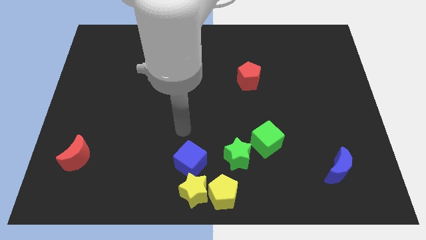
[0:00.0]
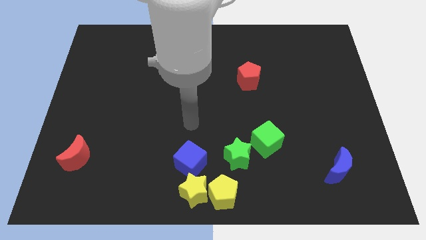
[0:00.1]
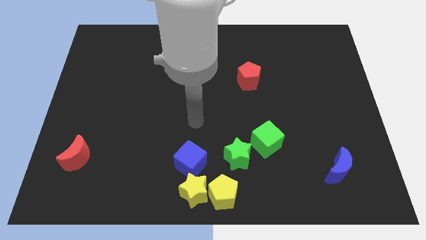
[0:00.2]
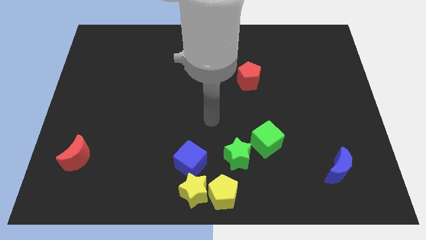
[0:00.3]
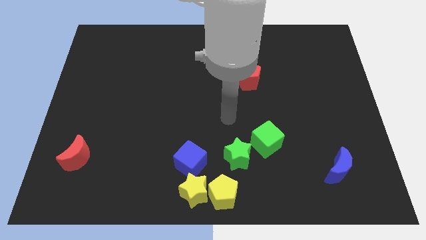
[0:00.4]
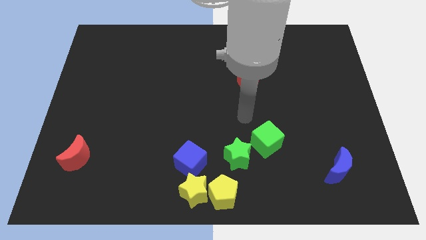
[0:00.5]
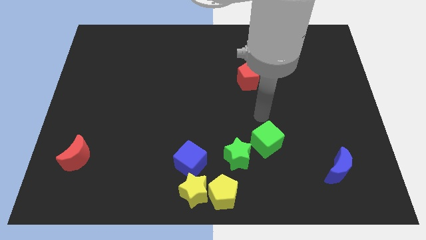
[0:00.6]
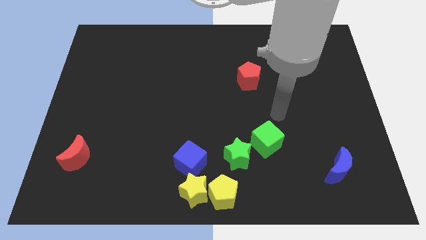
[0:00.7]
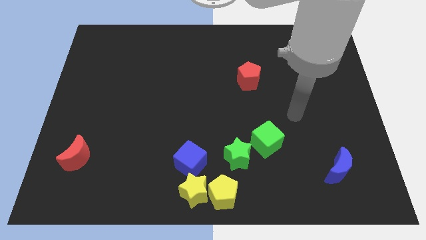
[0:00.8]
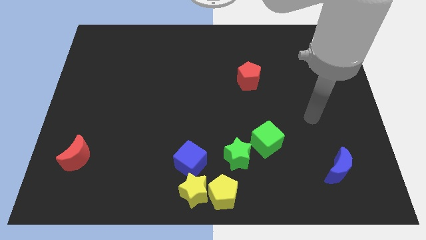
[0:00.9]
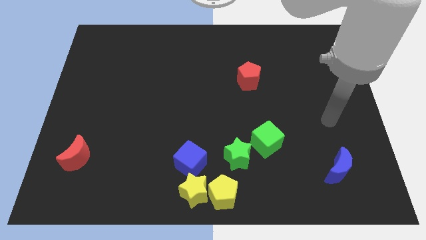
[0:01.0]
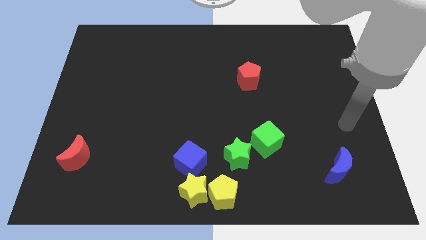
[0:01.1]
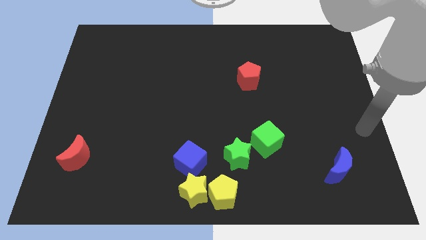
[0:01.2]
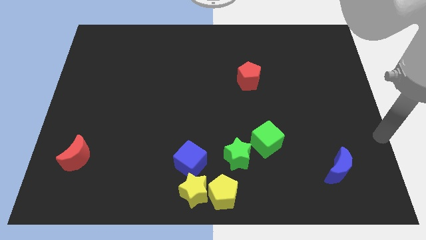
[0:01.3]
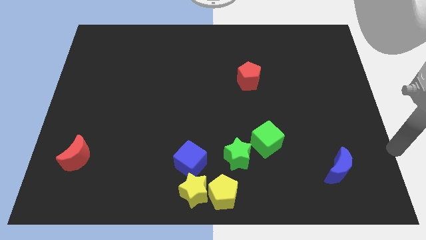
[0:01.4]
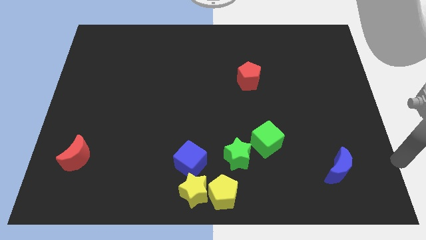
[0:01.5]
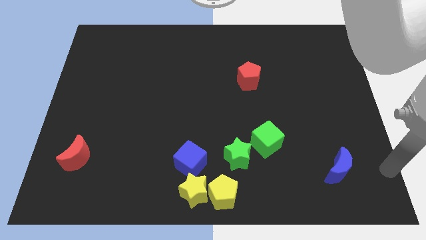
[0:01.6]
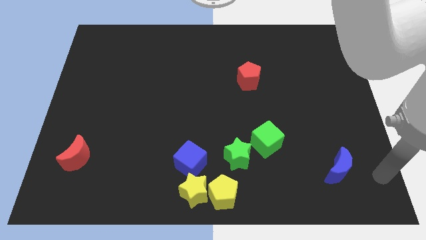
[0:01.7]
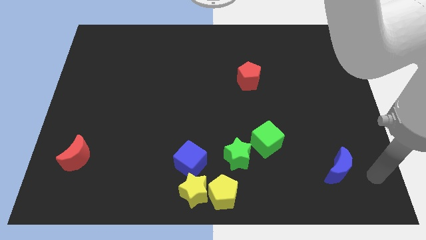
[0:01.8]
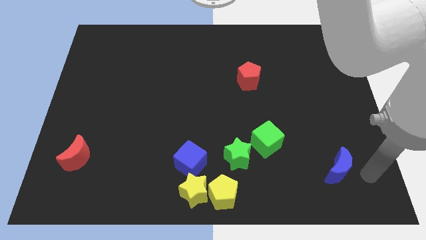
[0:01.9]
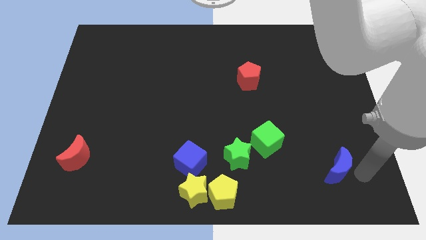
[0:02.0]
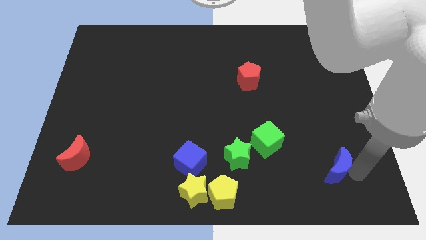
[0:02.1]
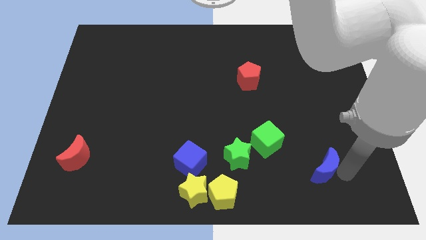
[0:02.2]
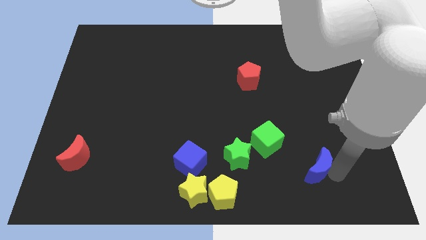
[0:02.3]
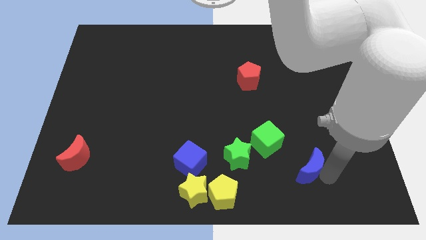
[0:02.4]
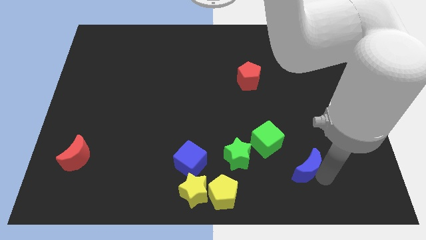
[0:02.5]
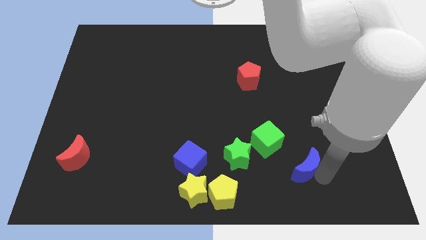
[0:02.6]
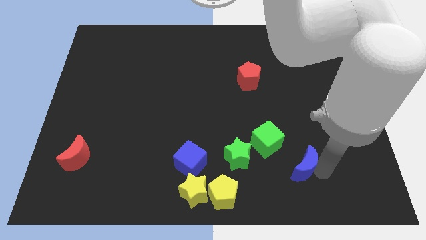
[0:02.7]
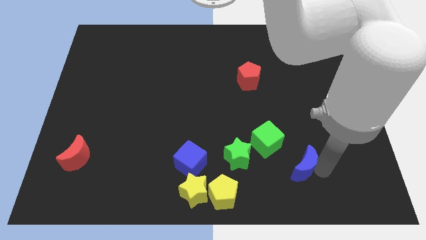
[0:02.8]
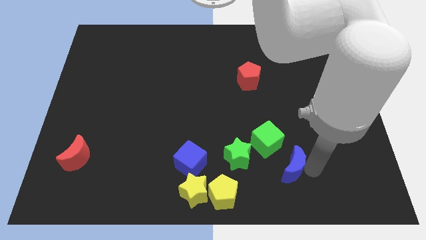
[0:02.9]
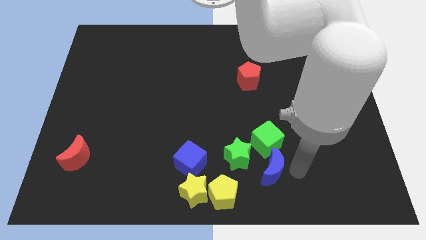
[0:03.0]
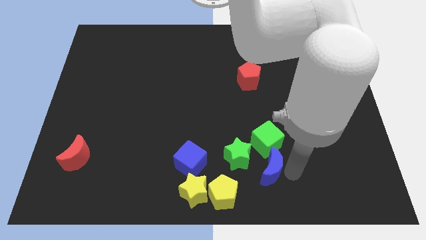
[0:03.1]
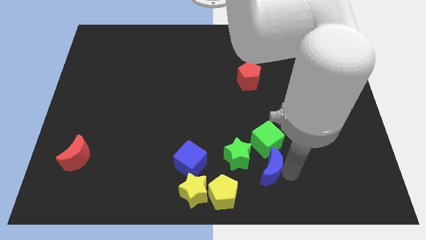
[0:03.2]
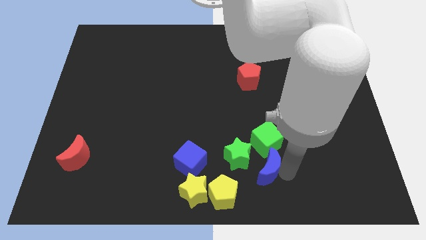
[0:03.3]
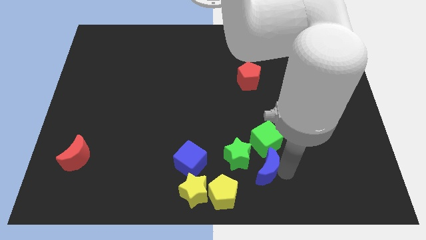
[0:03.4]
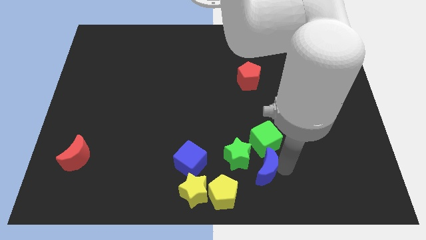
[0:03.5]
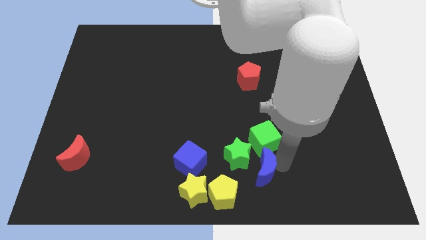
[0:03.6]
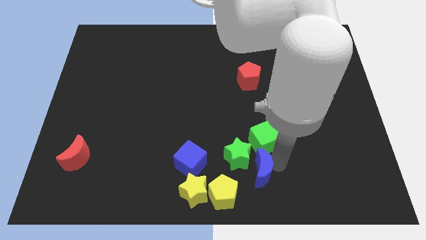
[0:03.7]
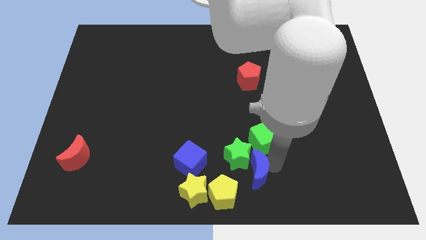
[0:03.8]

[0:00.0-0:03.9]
slide the blue crescent slightly to the left

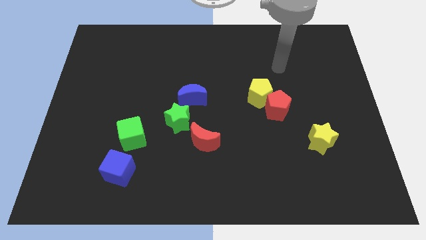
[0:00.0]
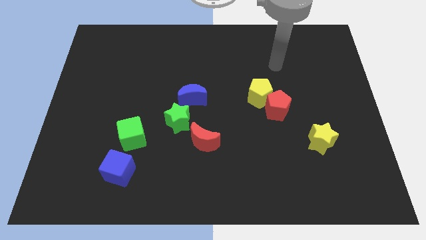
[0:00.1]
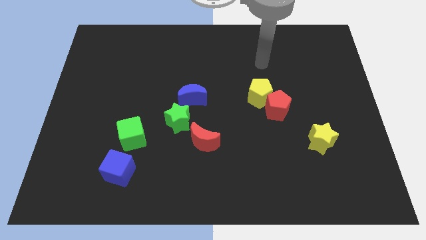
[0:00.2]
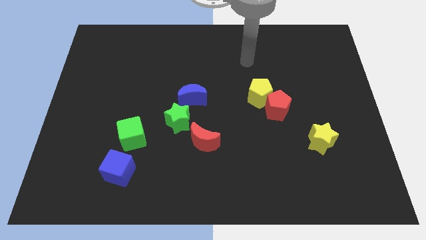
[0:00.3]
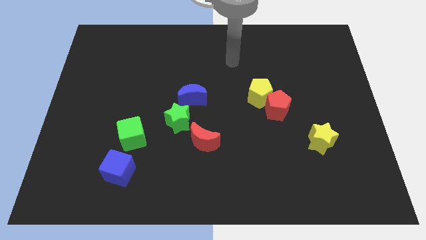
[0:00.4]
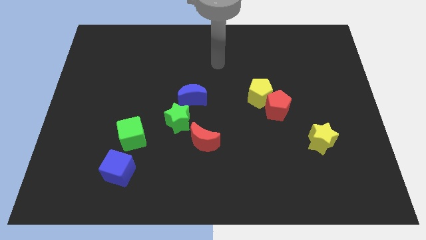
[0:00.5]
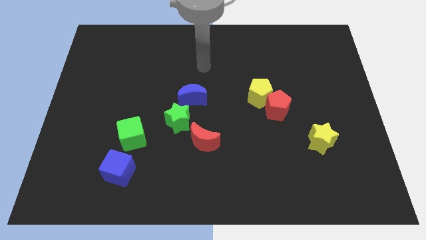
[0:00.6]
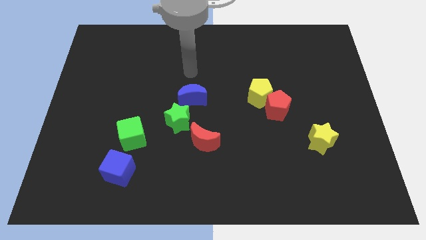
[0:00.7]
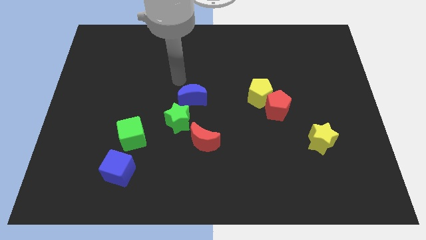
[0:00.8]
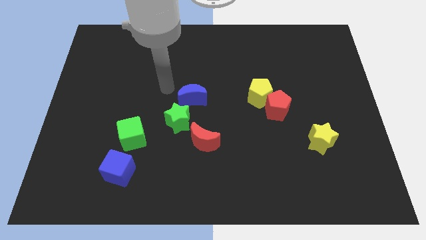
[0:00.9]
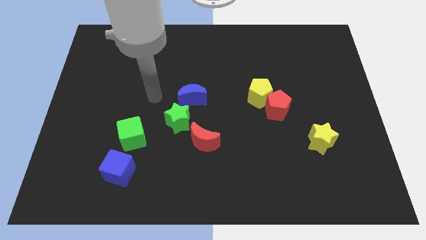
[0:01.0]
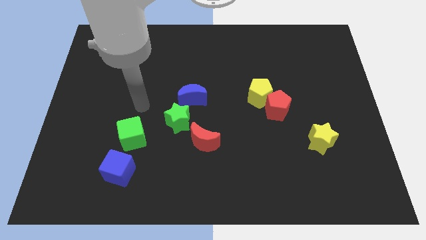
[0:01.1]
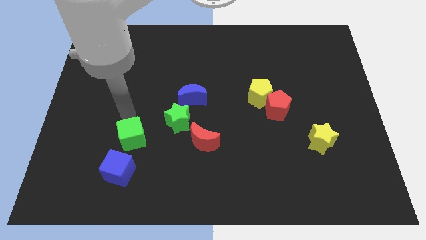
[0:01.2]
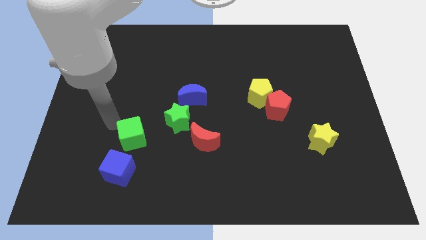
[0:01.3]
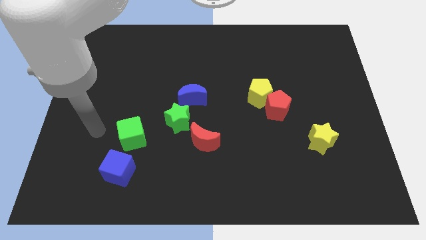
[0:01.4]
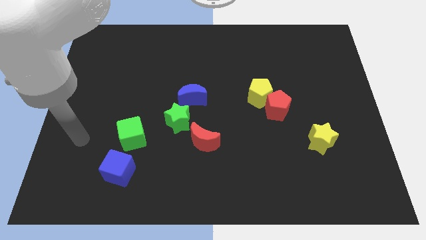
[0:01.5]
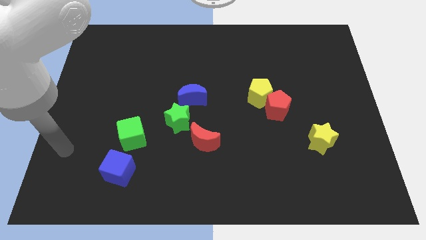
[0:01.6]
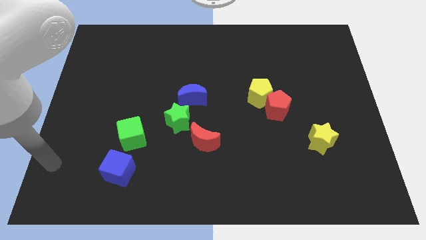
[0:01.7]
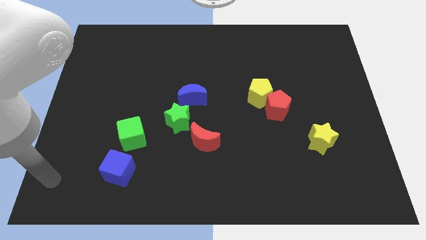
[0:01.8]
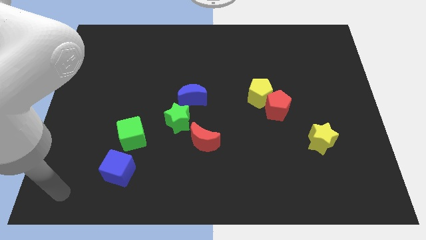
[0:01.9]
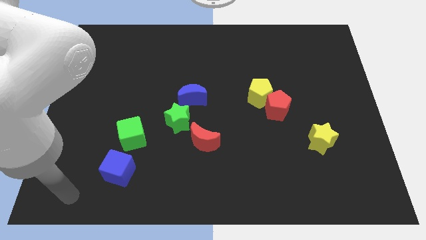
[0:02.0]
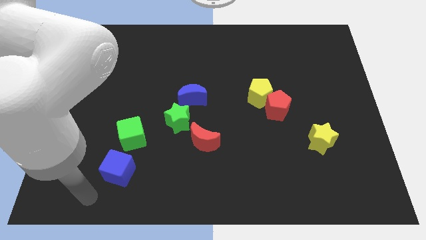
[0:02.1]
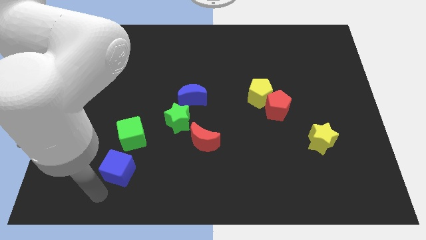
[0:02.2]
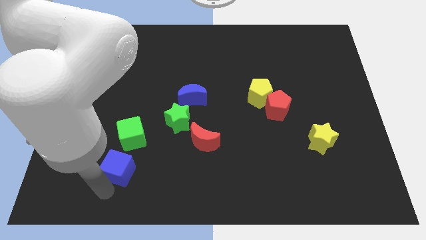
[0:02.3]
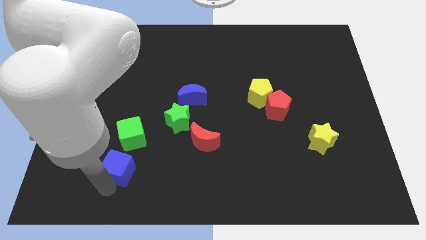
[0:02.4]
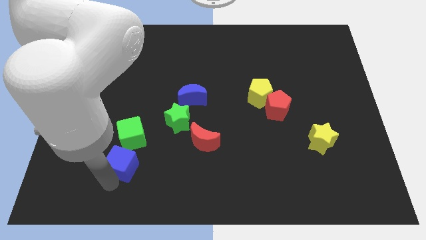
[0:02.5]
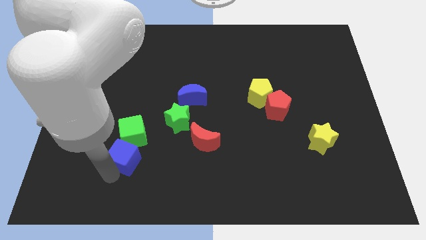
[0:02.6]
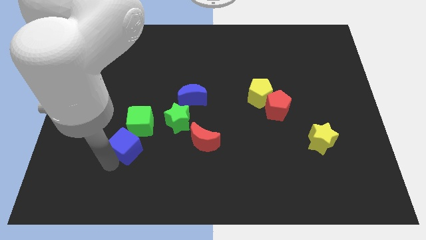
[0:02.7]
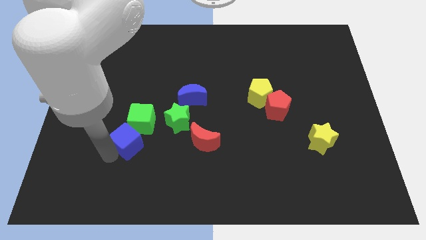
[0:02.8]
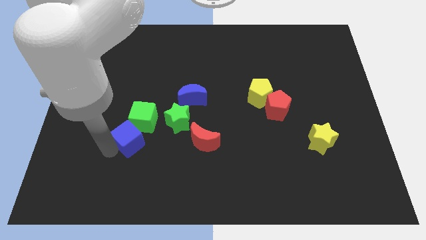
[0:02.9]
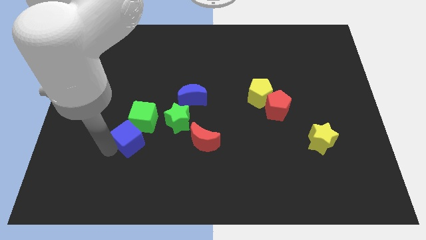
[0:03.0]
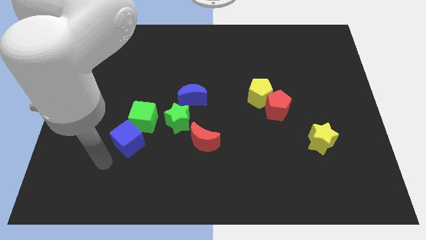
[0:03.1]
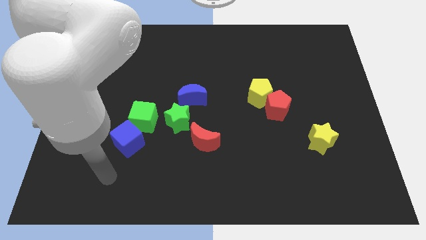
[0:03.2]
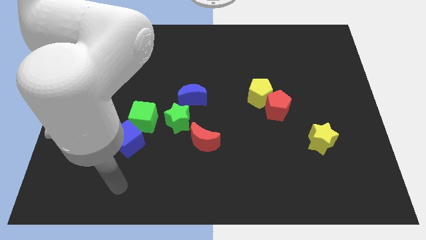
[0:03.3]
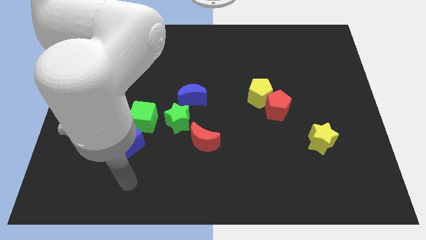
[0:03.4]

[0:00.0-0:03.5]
push blue cube with green cube upwards a bit

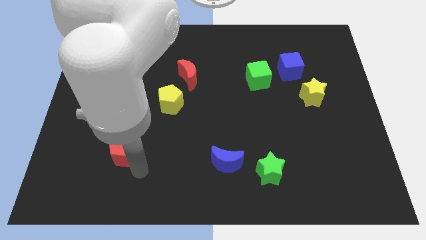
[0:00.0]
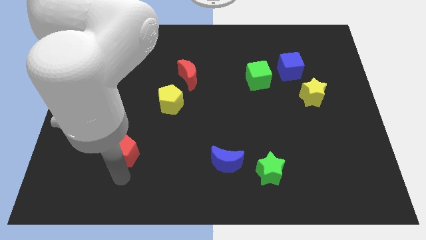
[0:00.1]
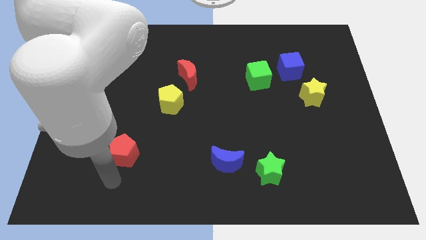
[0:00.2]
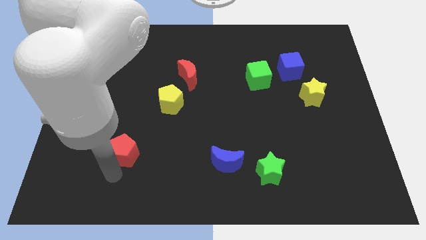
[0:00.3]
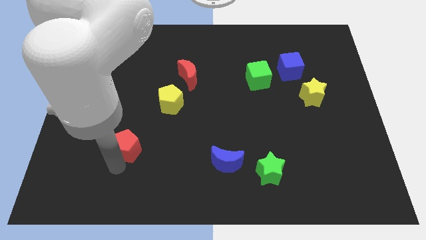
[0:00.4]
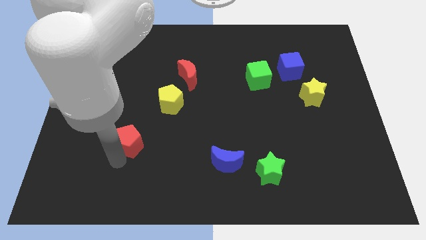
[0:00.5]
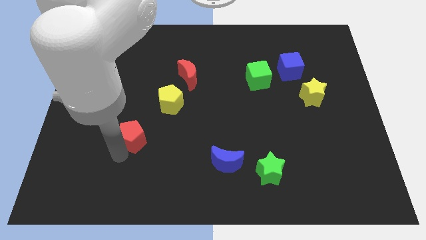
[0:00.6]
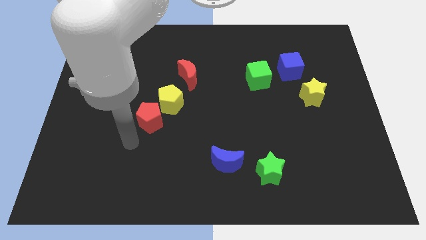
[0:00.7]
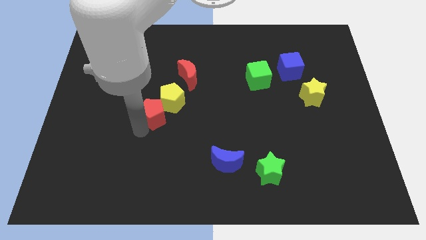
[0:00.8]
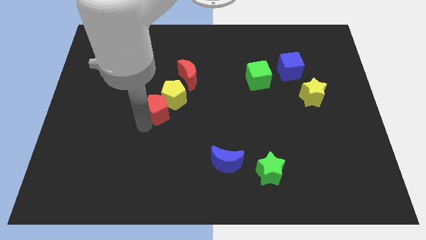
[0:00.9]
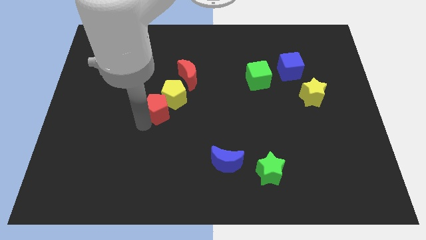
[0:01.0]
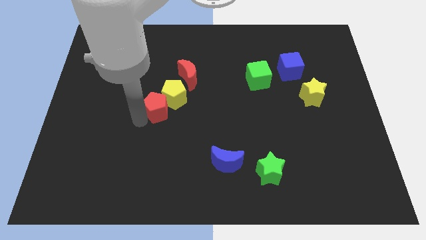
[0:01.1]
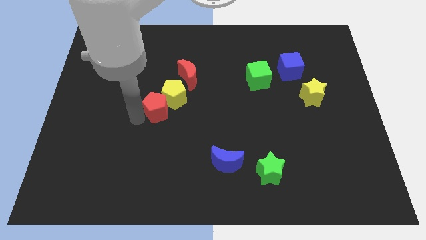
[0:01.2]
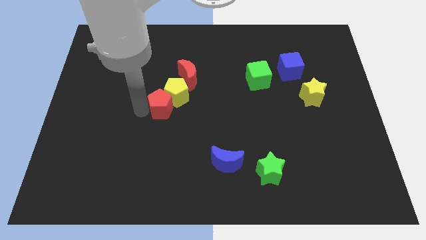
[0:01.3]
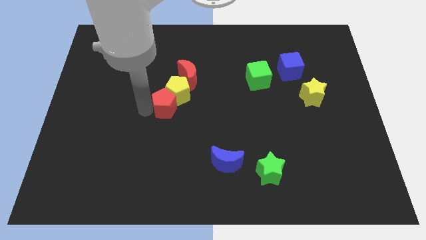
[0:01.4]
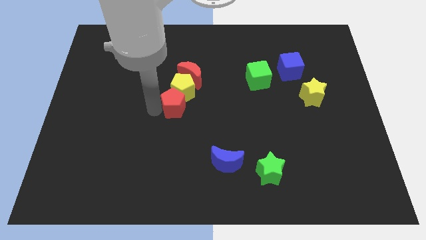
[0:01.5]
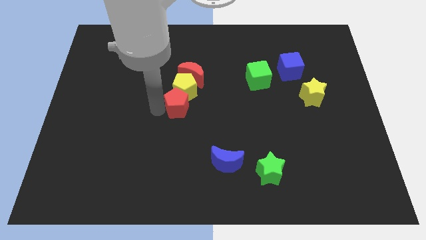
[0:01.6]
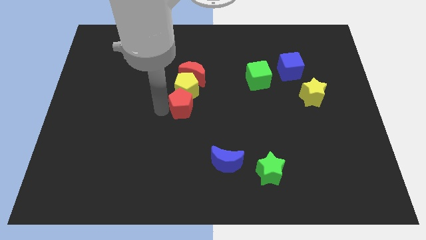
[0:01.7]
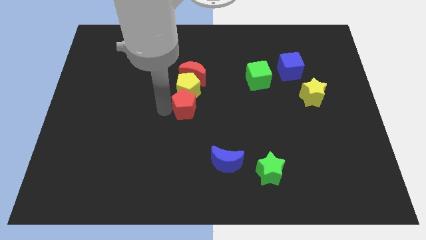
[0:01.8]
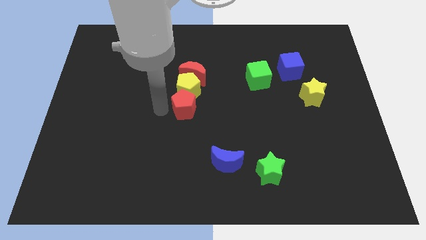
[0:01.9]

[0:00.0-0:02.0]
push the red pentagon towards the bottom of the yellow pentagon
